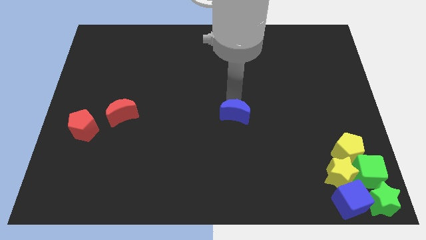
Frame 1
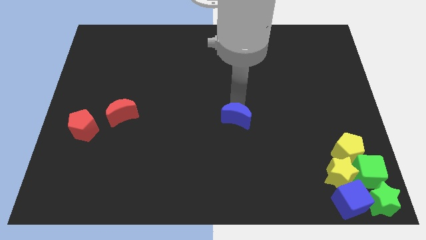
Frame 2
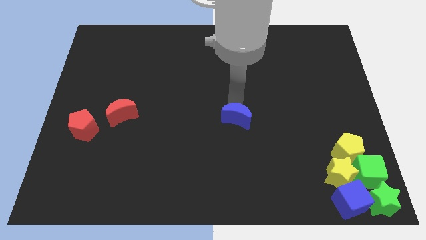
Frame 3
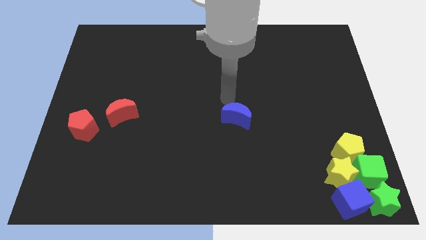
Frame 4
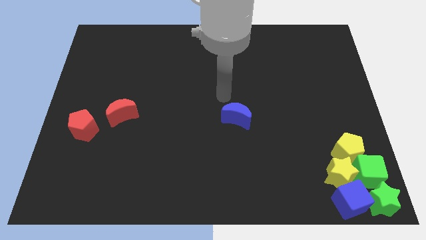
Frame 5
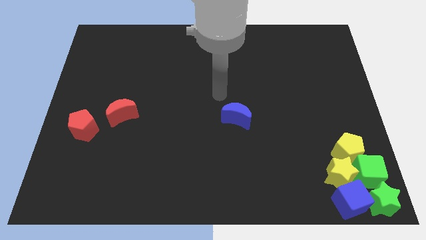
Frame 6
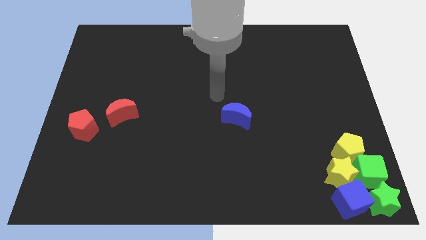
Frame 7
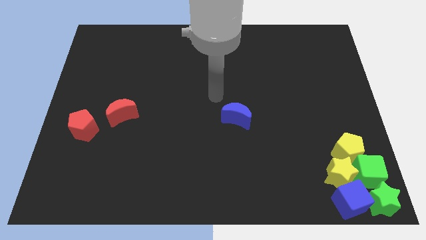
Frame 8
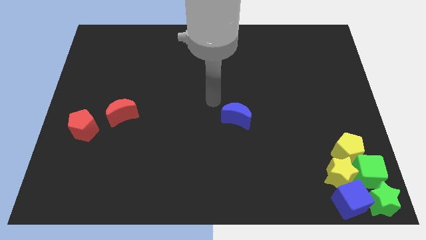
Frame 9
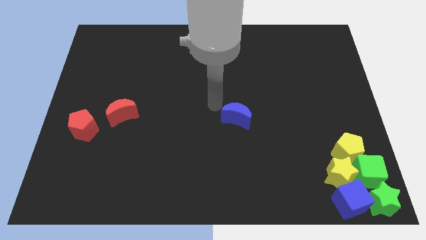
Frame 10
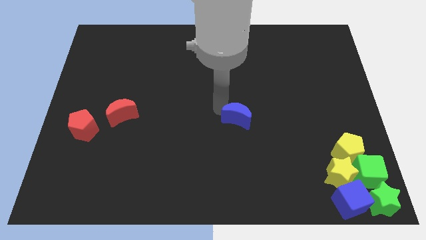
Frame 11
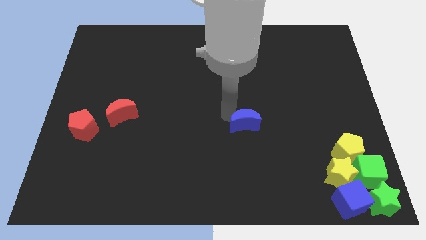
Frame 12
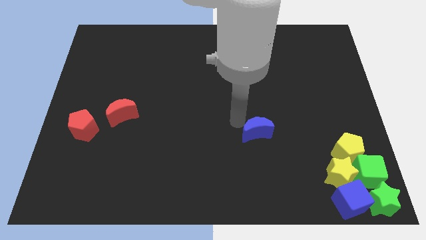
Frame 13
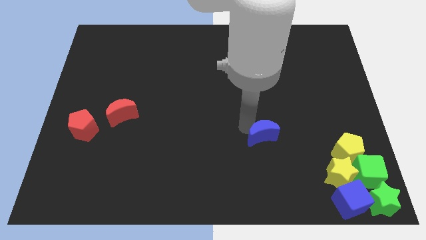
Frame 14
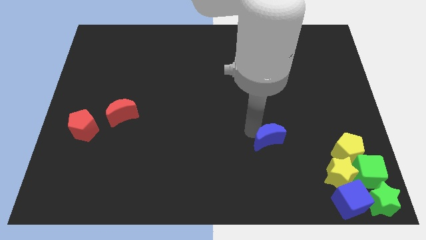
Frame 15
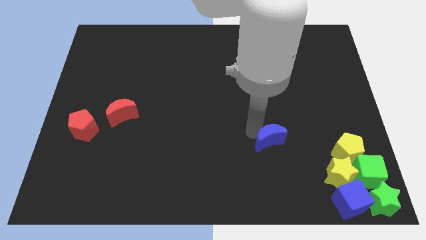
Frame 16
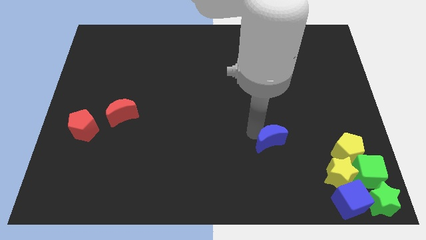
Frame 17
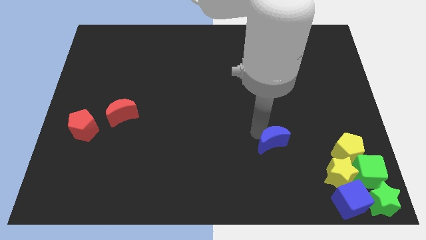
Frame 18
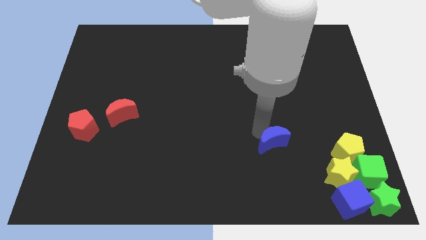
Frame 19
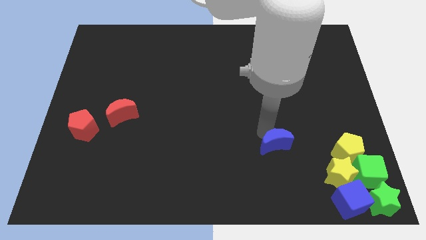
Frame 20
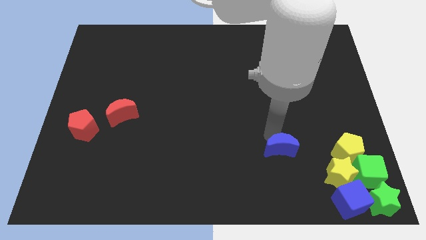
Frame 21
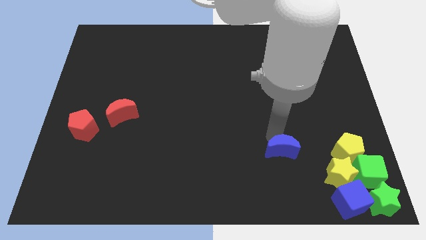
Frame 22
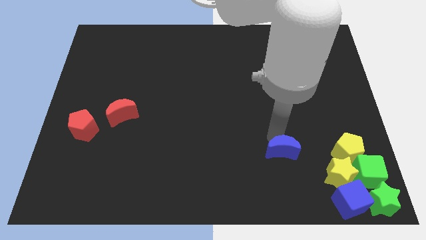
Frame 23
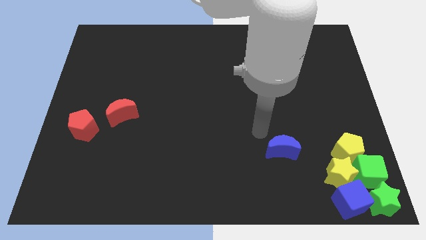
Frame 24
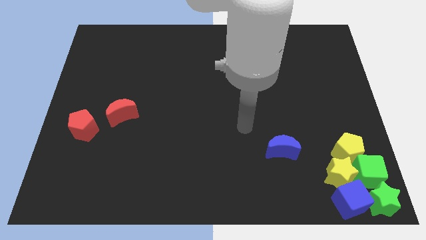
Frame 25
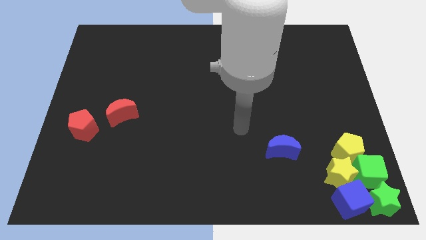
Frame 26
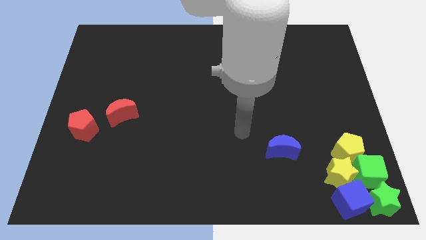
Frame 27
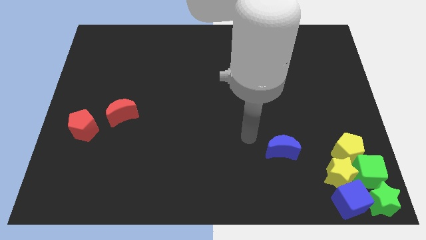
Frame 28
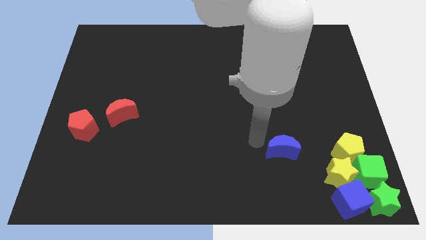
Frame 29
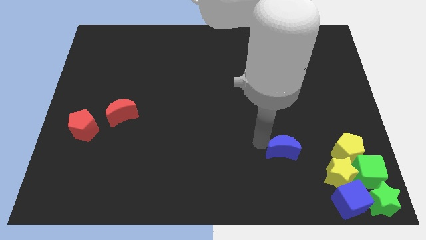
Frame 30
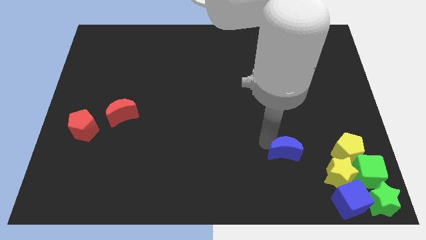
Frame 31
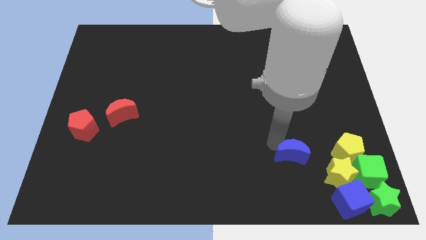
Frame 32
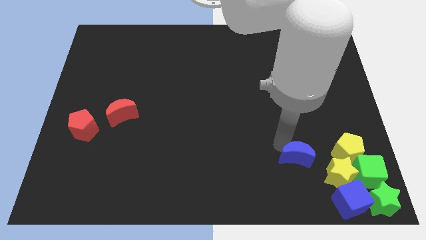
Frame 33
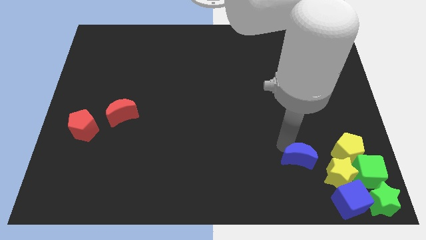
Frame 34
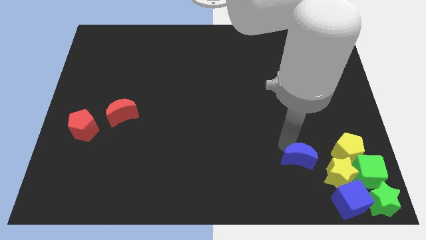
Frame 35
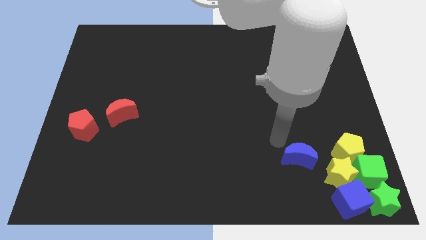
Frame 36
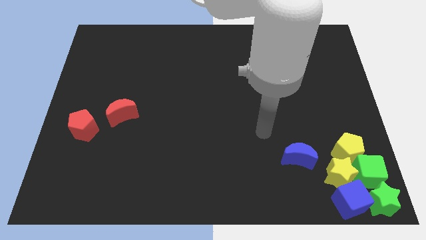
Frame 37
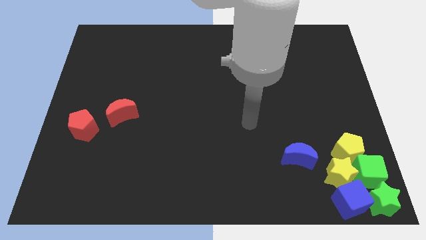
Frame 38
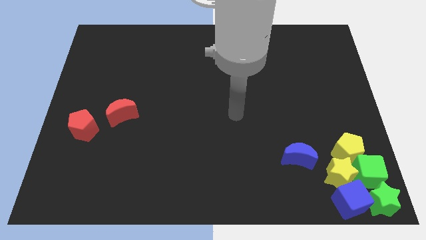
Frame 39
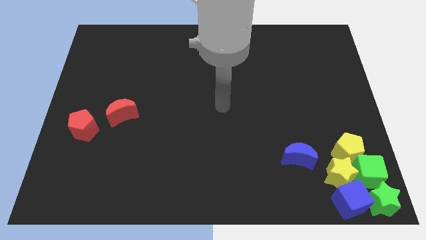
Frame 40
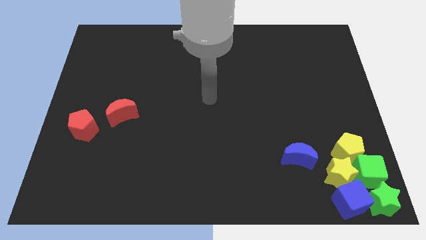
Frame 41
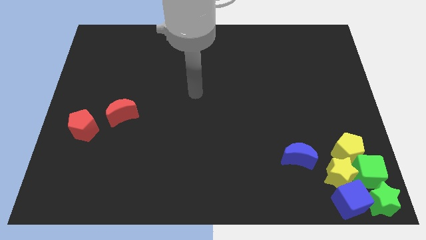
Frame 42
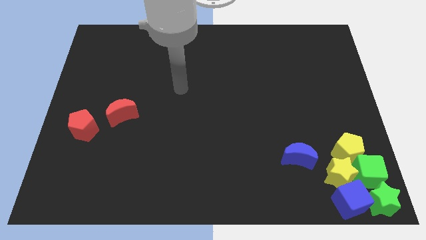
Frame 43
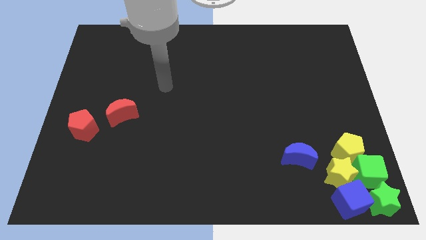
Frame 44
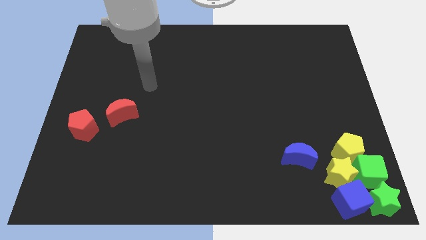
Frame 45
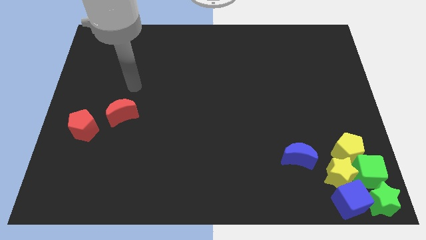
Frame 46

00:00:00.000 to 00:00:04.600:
place the blue crescent towards the left of the yellow pentagon

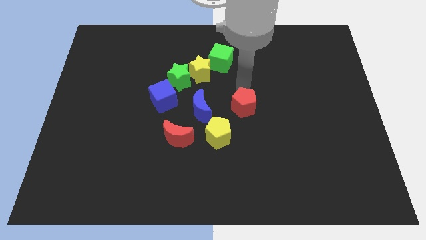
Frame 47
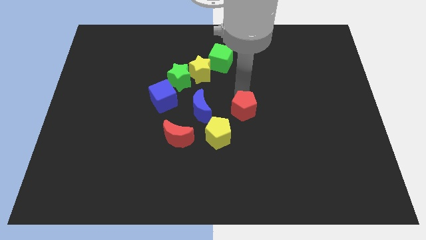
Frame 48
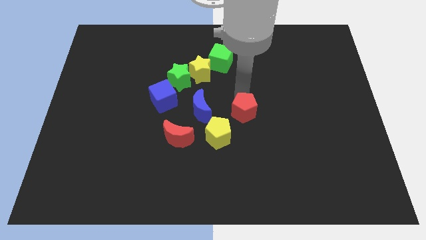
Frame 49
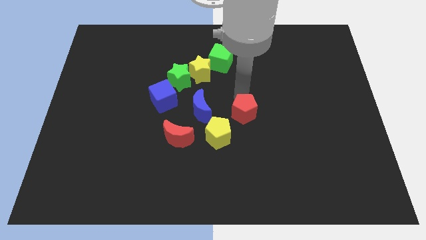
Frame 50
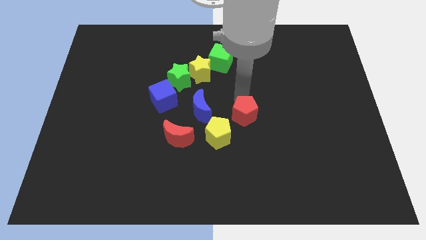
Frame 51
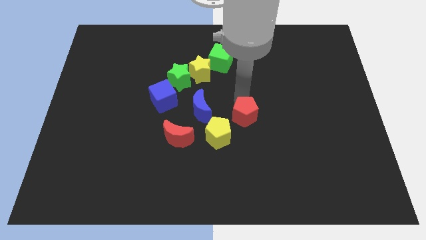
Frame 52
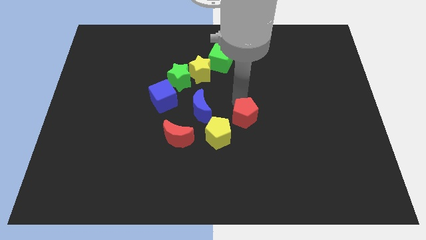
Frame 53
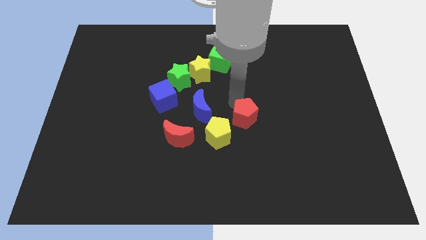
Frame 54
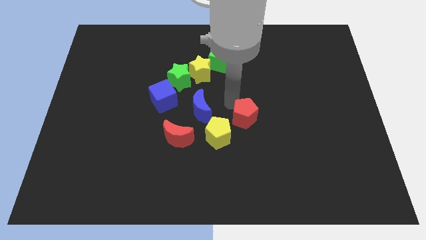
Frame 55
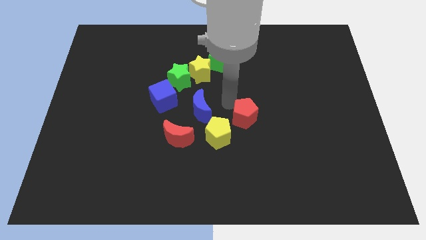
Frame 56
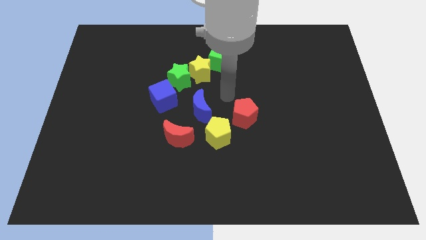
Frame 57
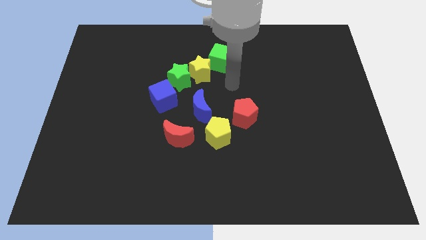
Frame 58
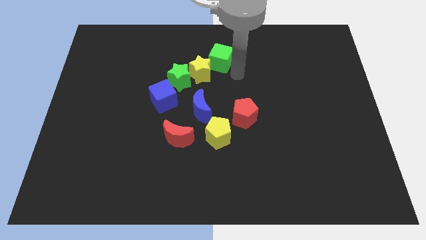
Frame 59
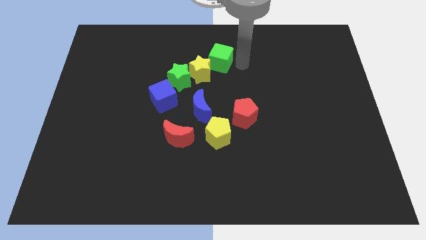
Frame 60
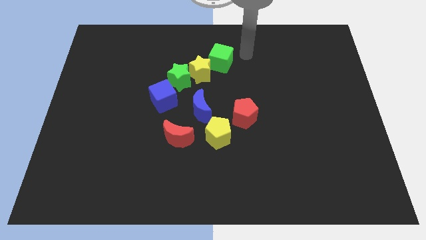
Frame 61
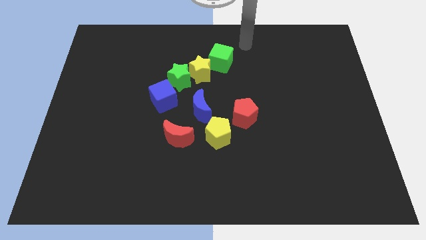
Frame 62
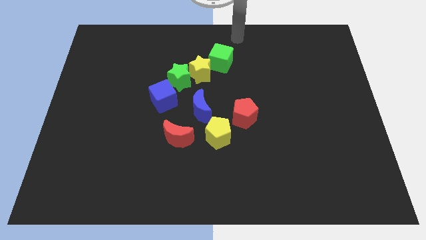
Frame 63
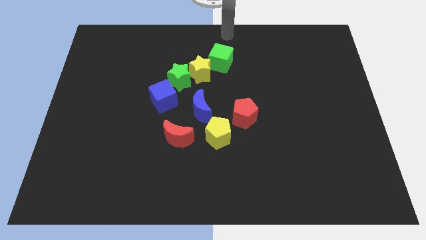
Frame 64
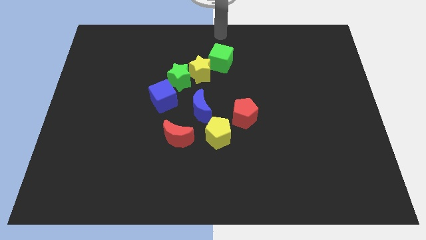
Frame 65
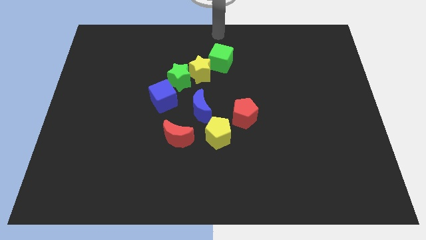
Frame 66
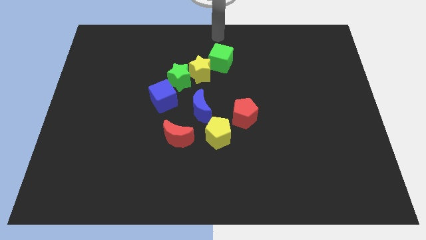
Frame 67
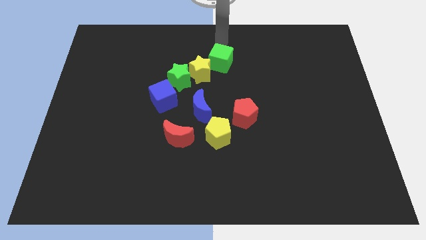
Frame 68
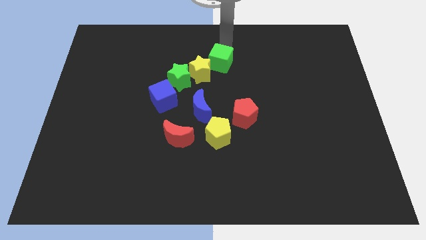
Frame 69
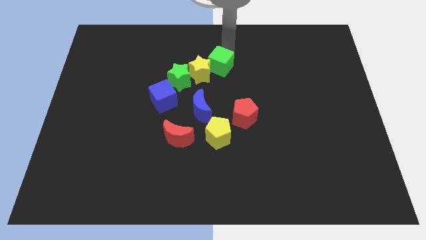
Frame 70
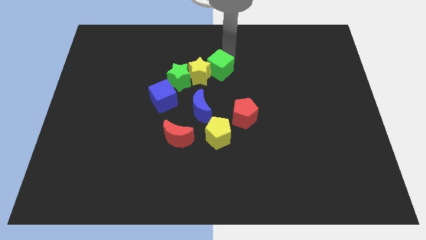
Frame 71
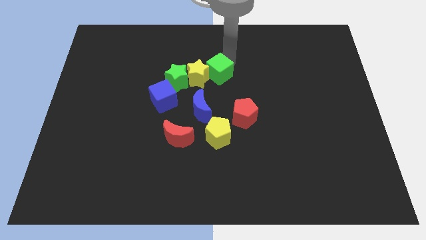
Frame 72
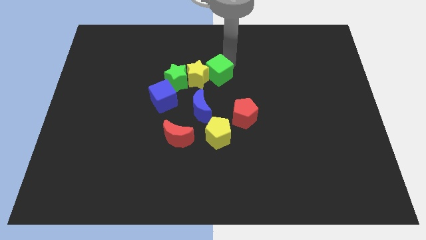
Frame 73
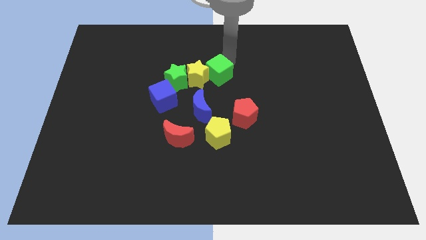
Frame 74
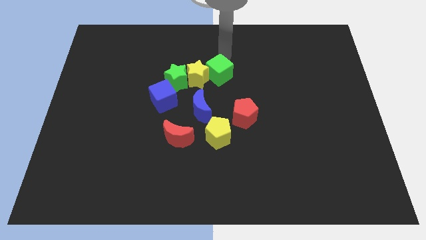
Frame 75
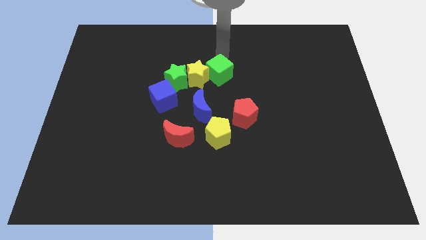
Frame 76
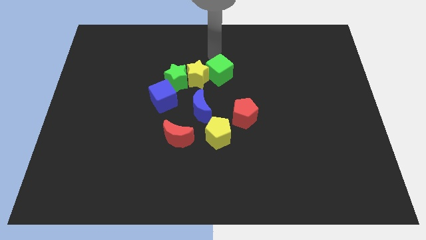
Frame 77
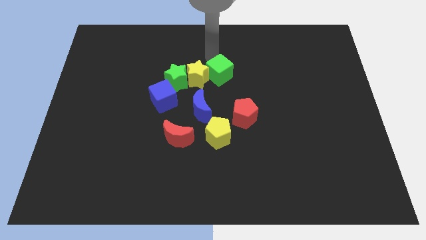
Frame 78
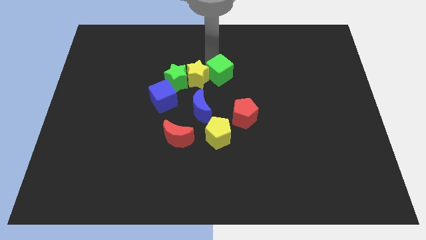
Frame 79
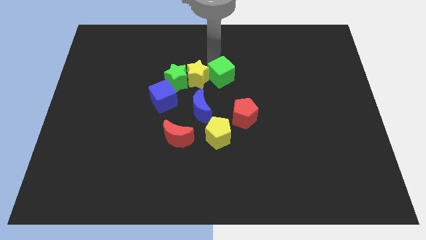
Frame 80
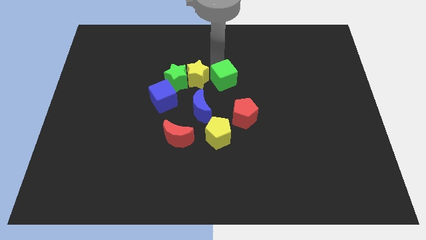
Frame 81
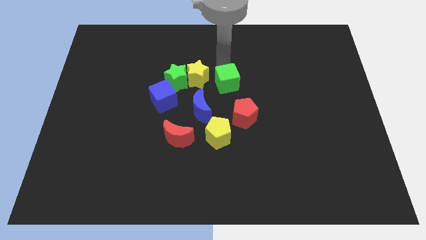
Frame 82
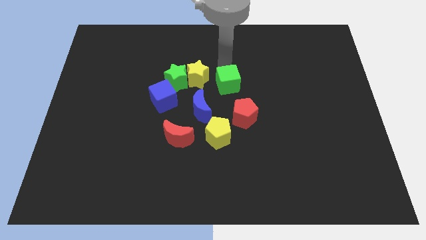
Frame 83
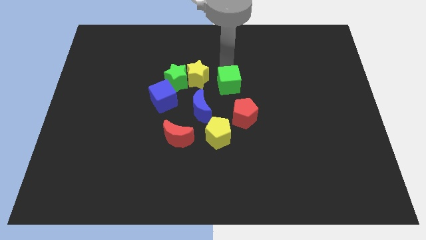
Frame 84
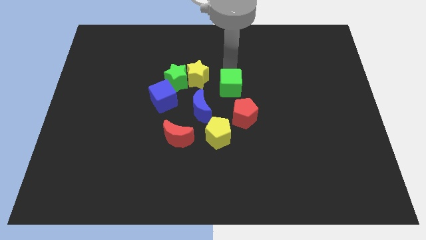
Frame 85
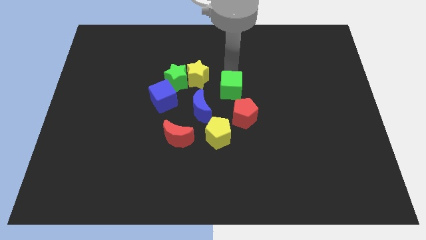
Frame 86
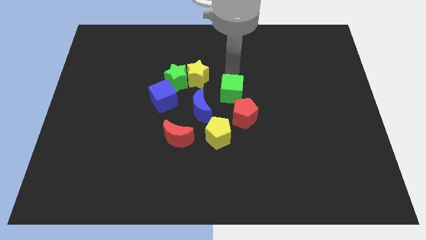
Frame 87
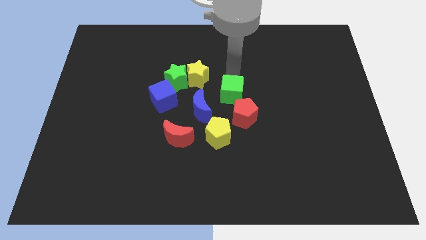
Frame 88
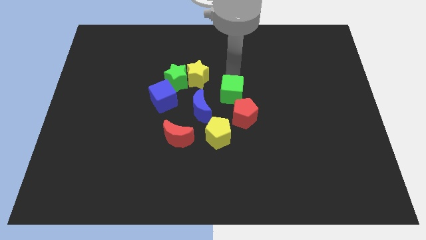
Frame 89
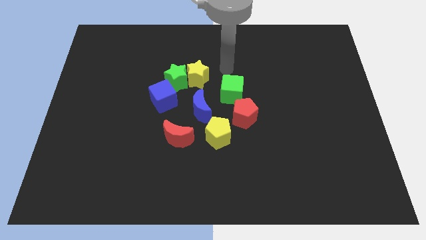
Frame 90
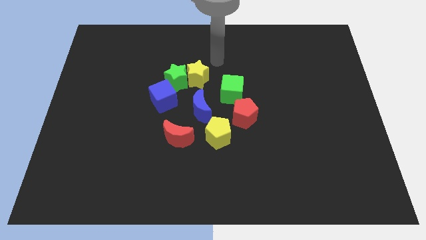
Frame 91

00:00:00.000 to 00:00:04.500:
push the red pentagon and green cube to the center
